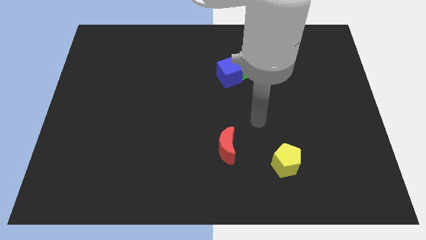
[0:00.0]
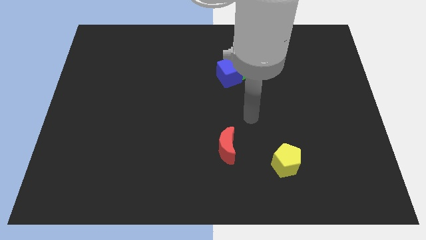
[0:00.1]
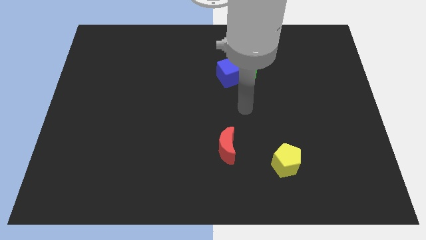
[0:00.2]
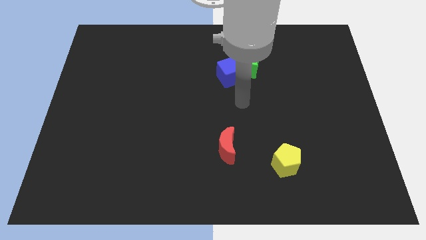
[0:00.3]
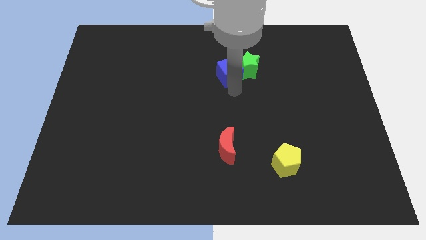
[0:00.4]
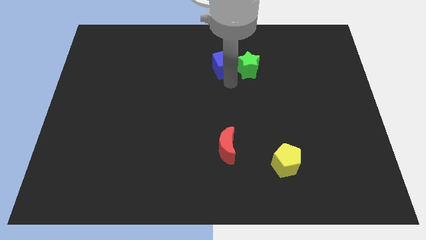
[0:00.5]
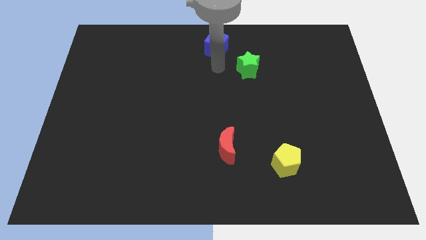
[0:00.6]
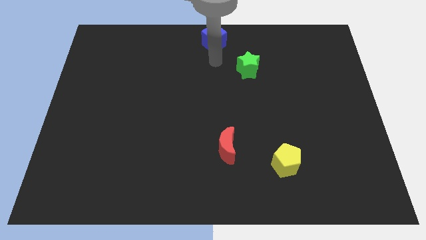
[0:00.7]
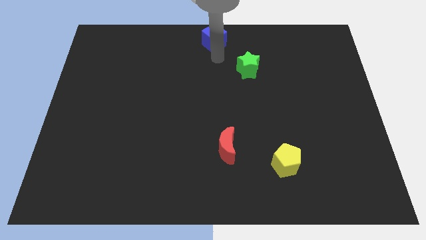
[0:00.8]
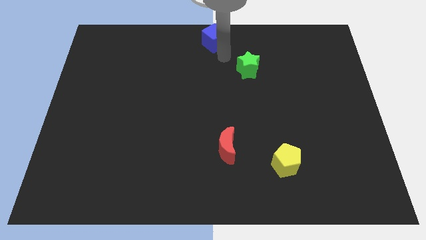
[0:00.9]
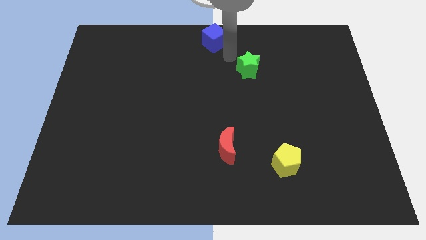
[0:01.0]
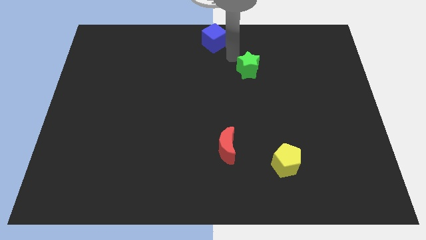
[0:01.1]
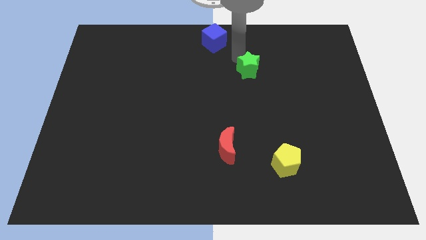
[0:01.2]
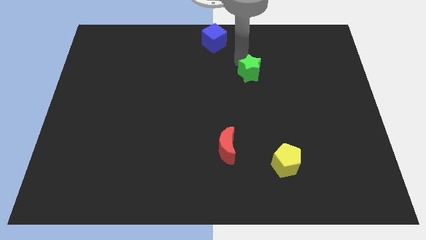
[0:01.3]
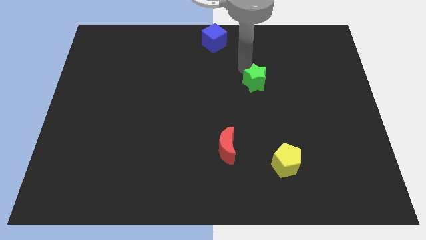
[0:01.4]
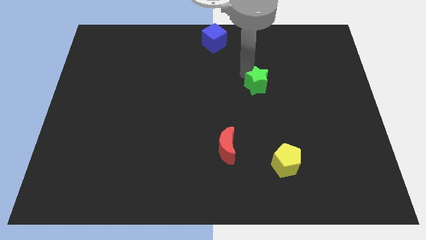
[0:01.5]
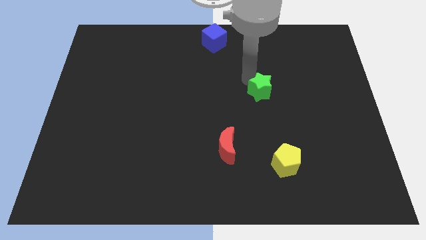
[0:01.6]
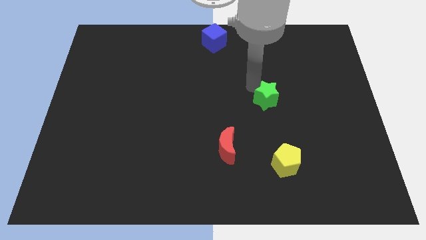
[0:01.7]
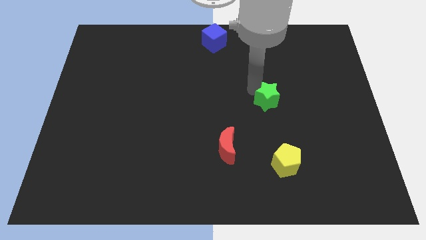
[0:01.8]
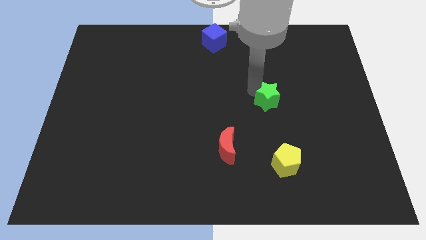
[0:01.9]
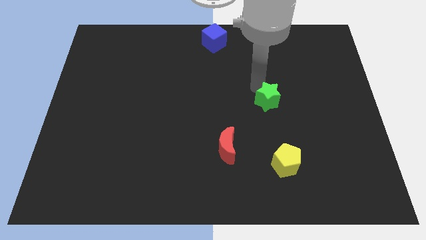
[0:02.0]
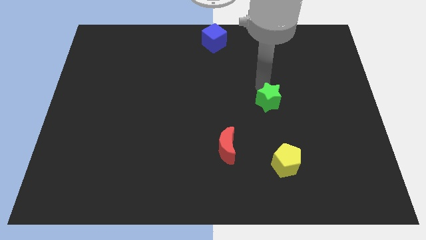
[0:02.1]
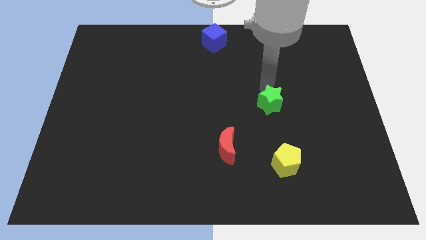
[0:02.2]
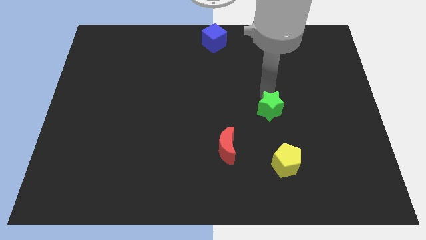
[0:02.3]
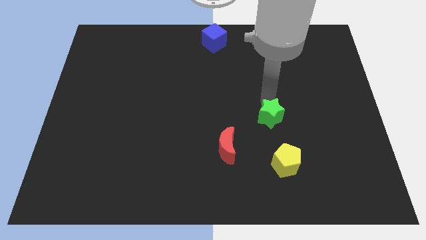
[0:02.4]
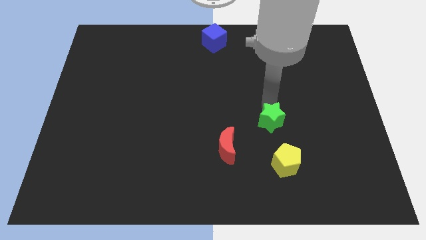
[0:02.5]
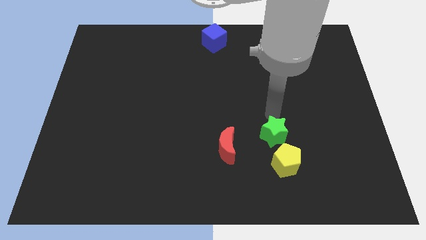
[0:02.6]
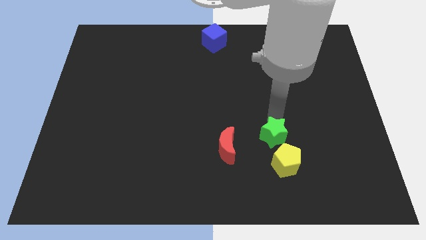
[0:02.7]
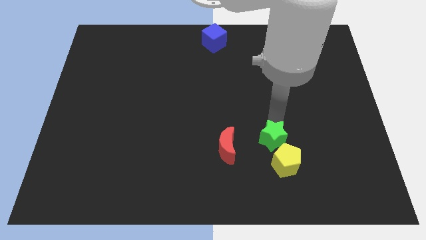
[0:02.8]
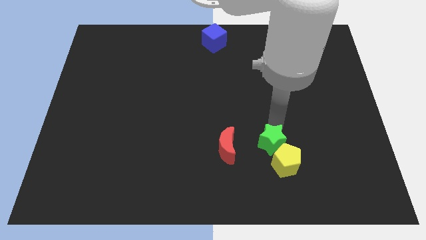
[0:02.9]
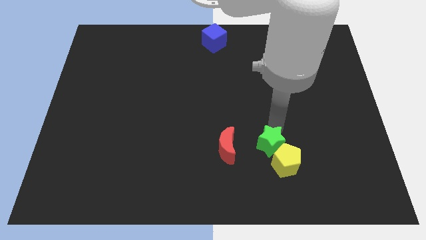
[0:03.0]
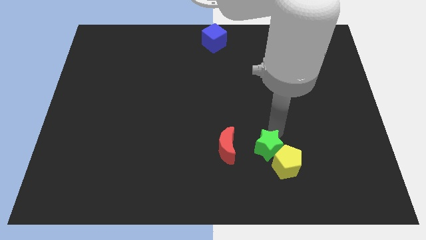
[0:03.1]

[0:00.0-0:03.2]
push the green block next to the yellow pentagon

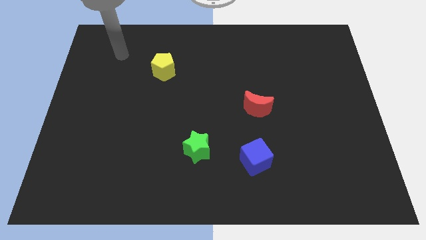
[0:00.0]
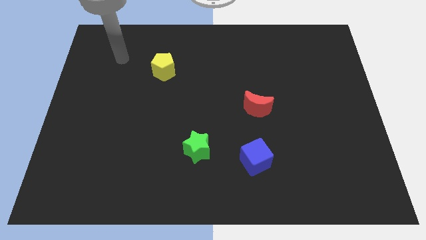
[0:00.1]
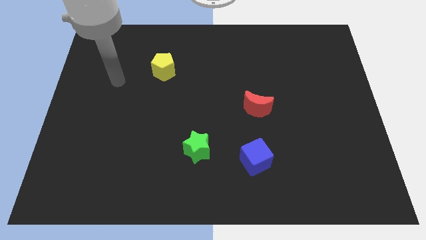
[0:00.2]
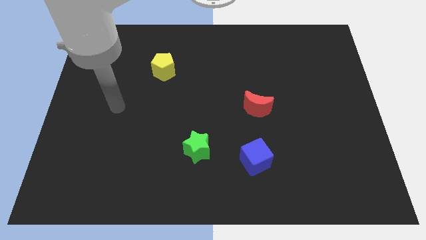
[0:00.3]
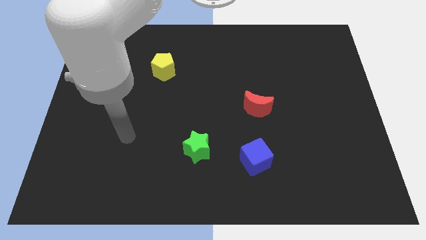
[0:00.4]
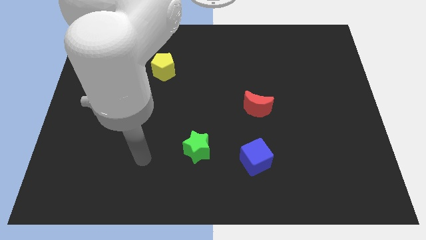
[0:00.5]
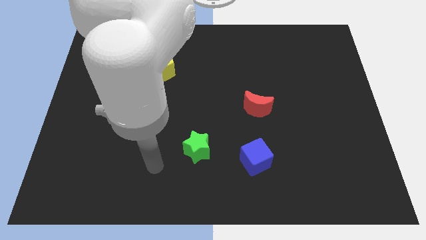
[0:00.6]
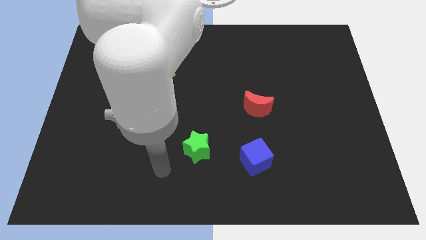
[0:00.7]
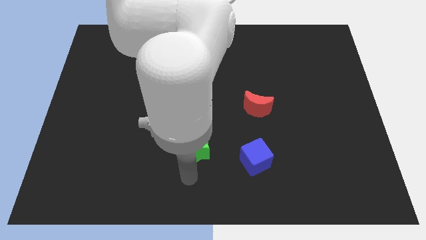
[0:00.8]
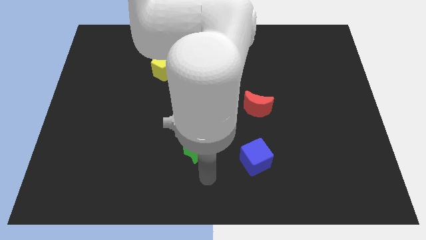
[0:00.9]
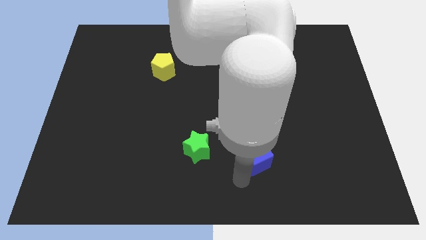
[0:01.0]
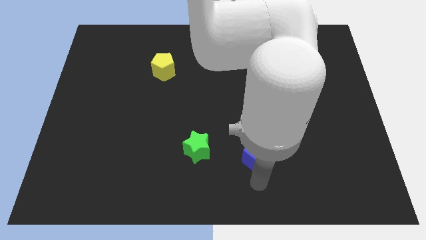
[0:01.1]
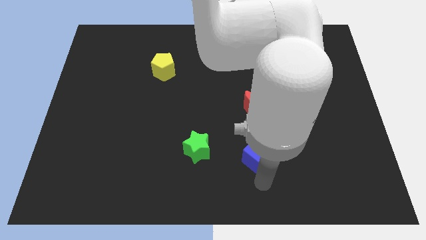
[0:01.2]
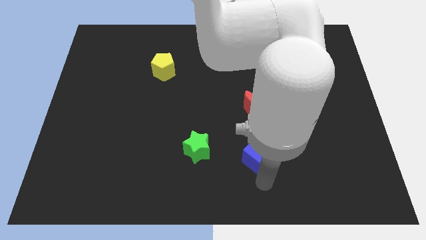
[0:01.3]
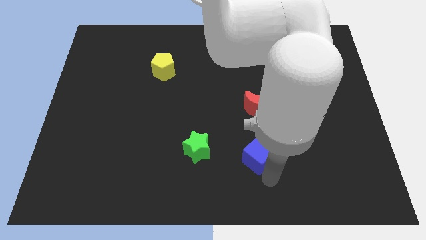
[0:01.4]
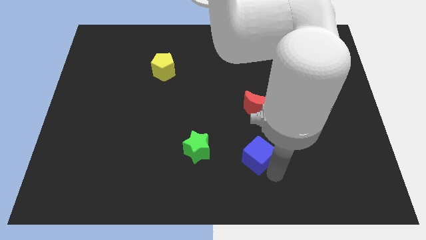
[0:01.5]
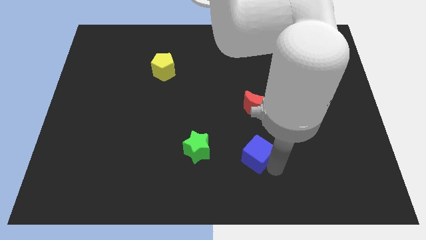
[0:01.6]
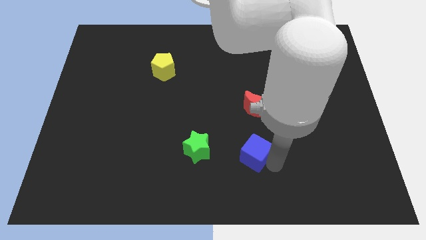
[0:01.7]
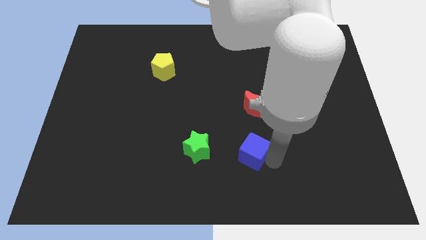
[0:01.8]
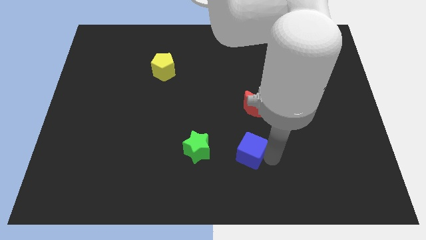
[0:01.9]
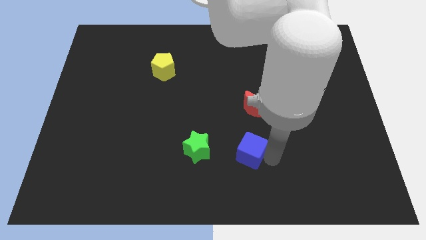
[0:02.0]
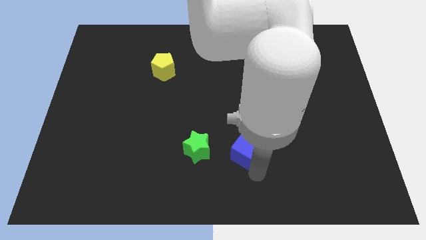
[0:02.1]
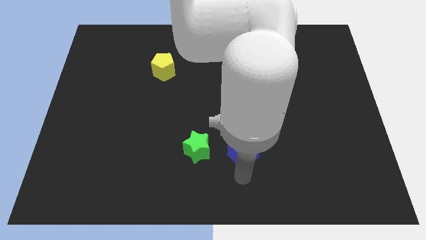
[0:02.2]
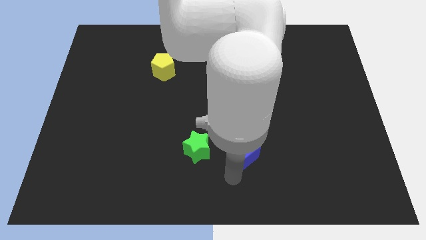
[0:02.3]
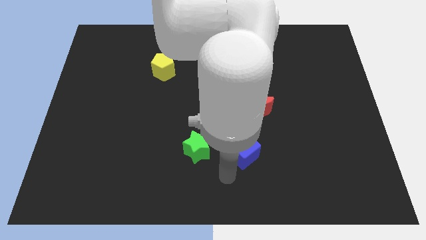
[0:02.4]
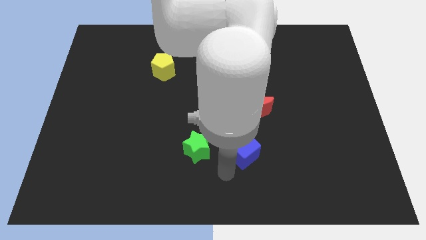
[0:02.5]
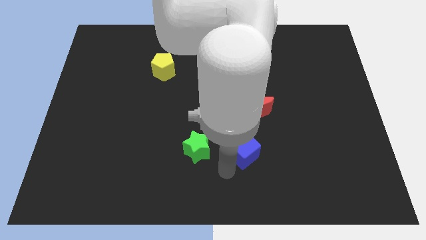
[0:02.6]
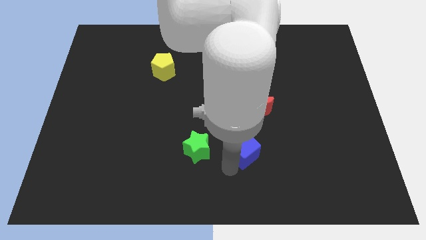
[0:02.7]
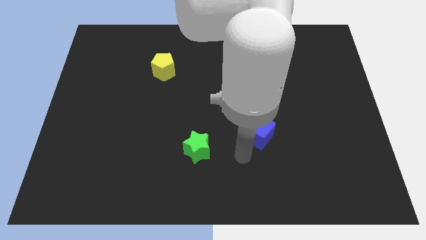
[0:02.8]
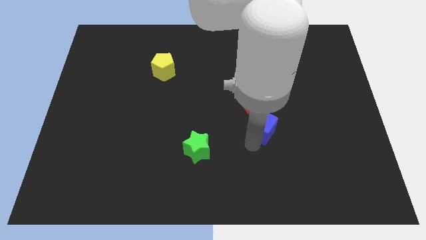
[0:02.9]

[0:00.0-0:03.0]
push the cube to the red moon

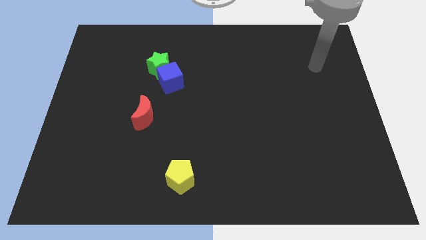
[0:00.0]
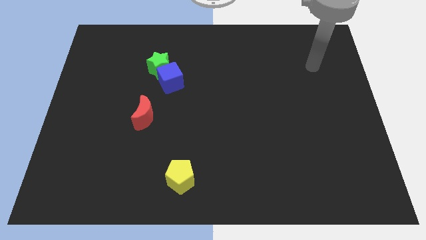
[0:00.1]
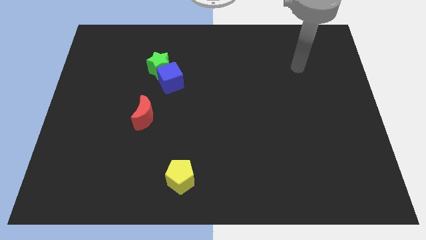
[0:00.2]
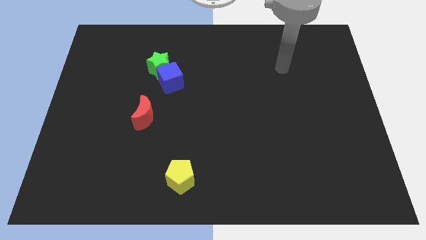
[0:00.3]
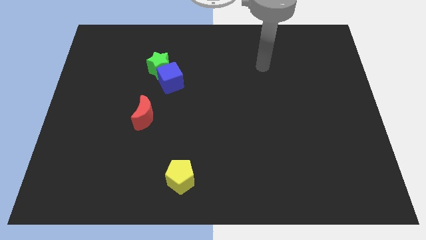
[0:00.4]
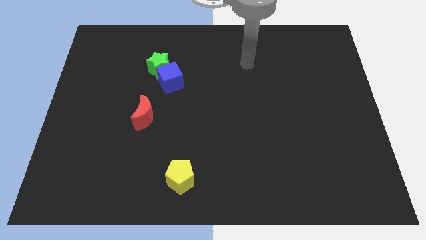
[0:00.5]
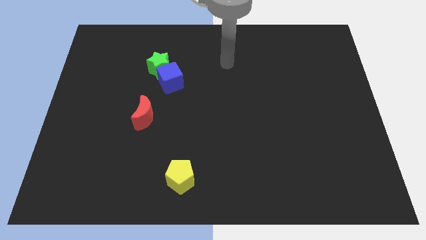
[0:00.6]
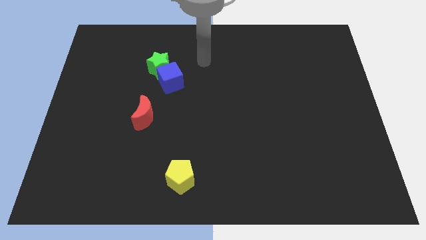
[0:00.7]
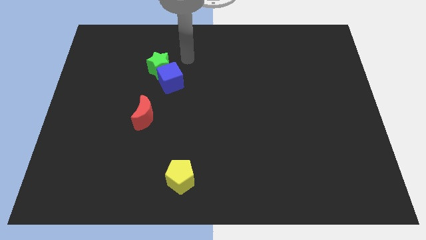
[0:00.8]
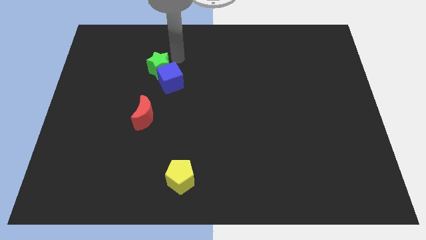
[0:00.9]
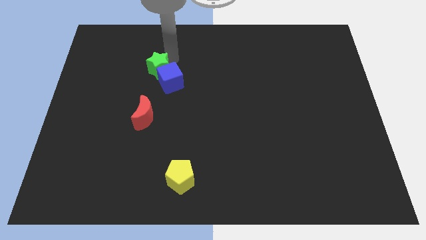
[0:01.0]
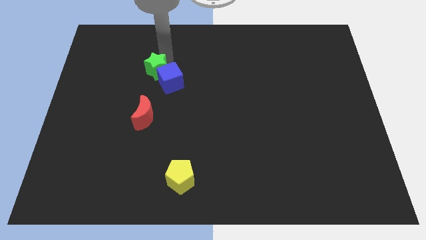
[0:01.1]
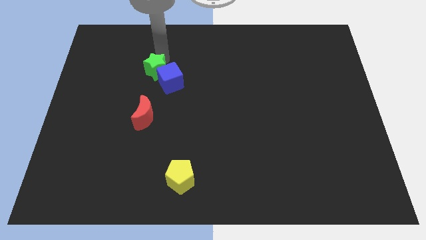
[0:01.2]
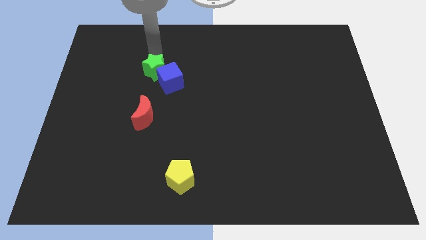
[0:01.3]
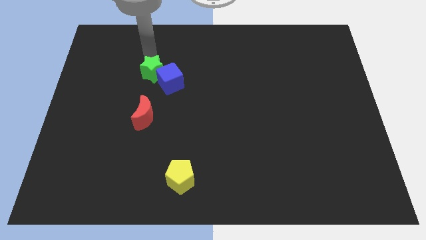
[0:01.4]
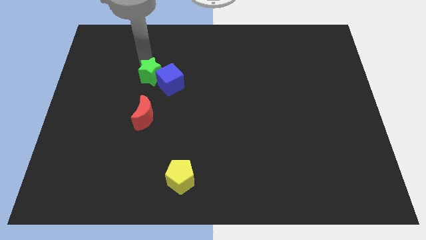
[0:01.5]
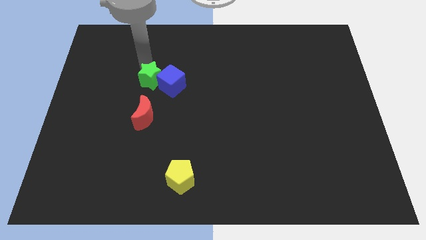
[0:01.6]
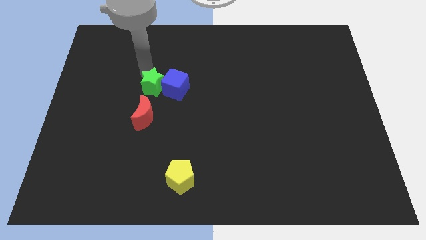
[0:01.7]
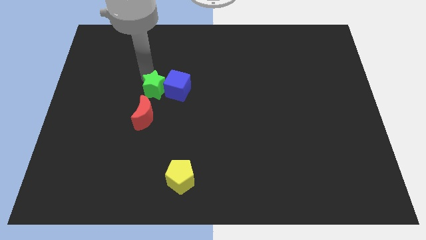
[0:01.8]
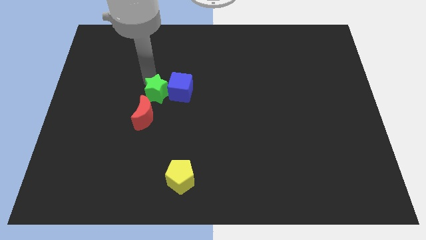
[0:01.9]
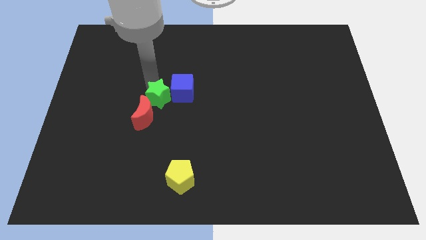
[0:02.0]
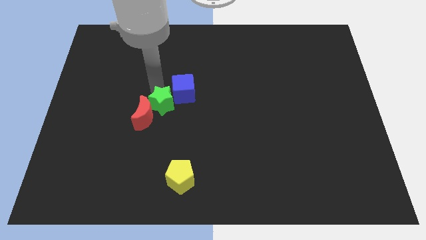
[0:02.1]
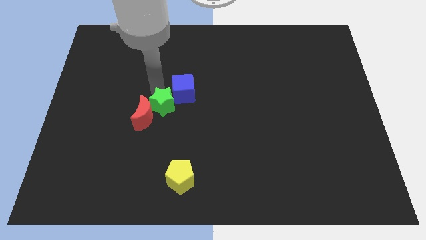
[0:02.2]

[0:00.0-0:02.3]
move the star close to the red block
